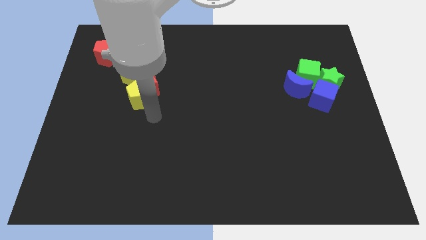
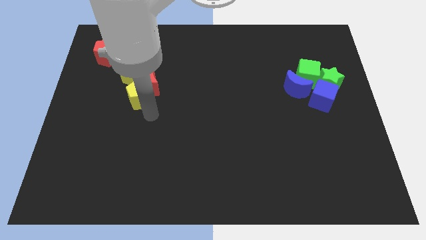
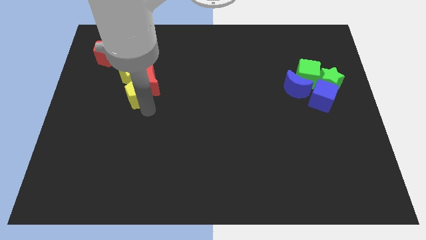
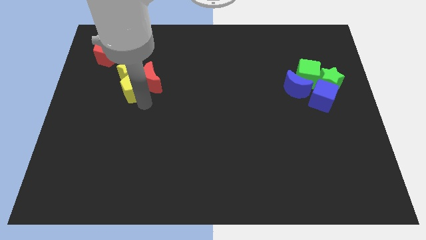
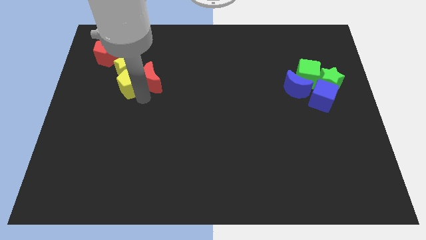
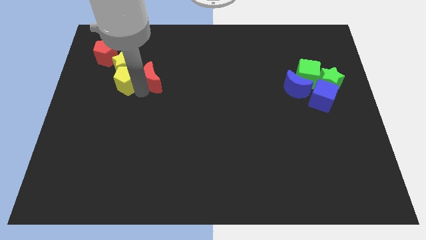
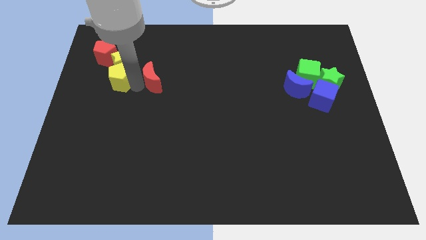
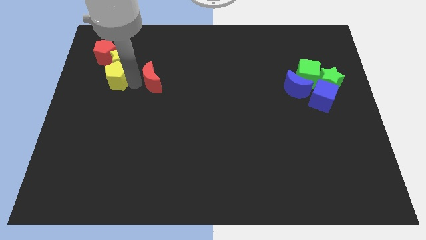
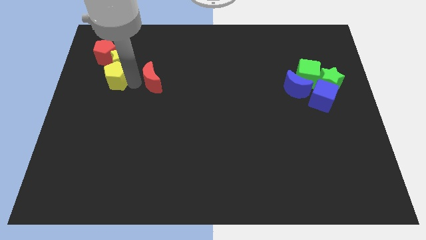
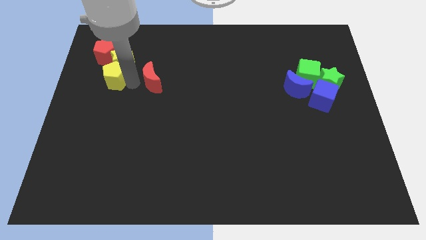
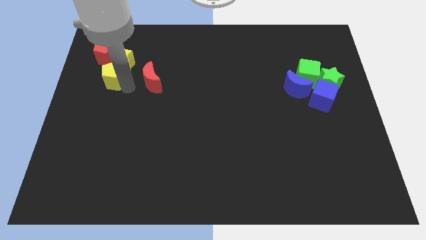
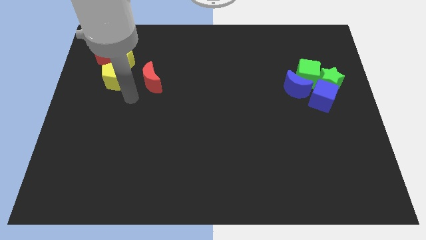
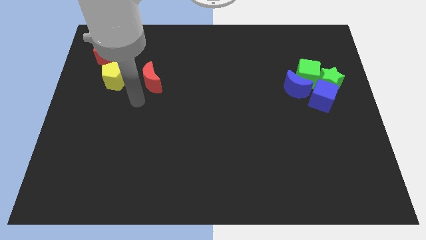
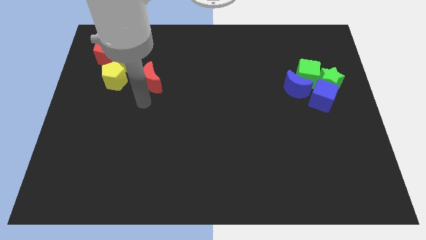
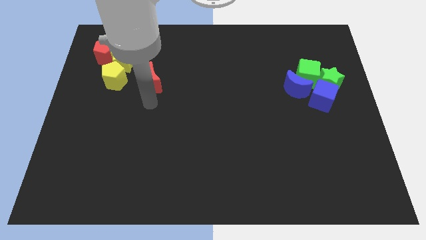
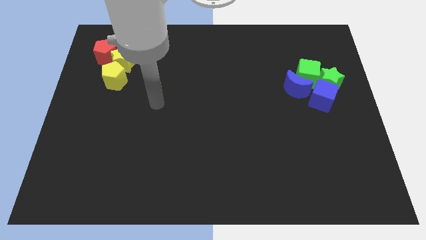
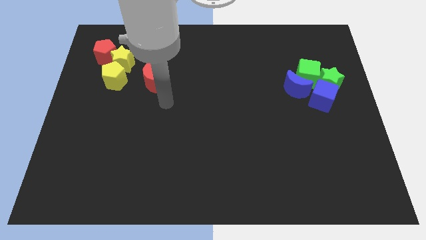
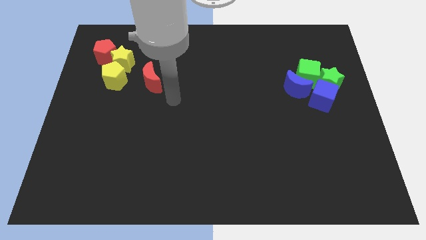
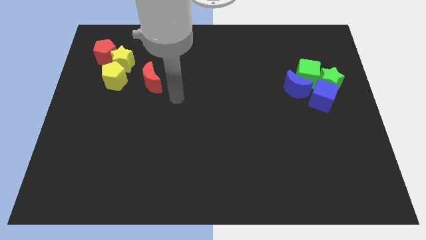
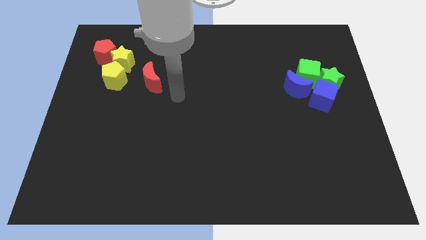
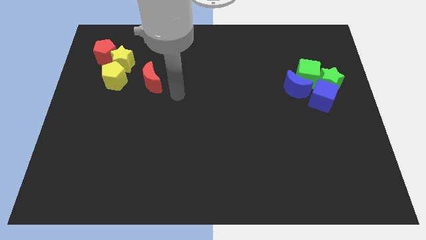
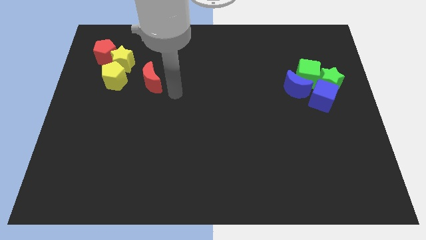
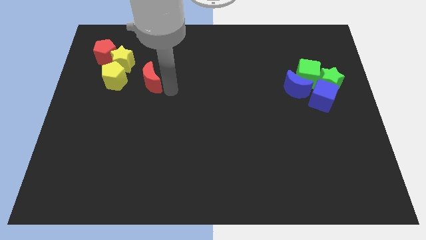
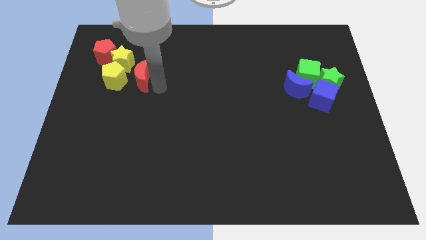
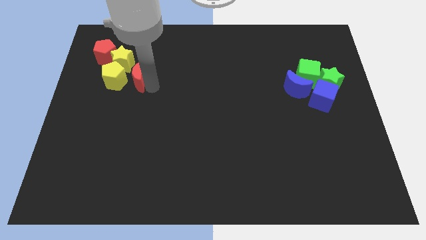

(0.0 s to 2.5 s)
place the yellow star and yellow pentagon in between the red pentagon and red crescent

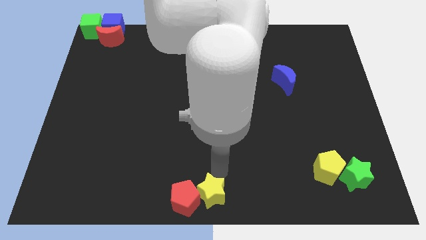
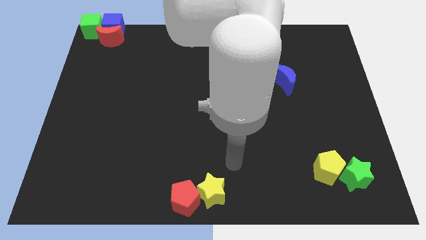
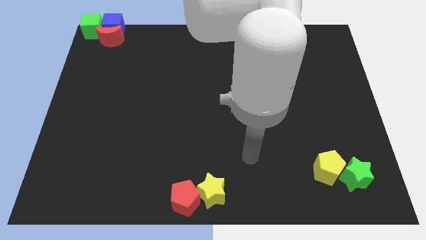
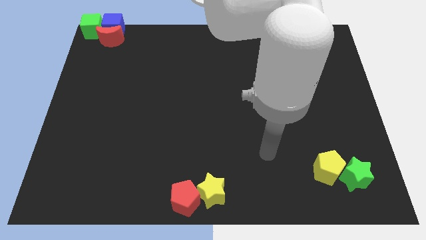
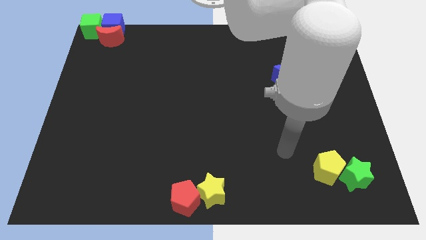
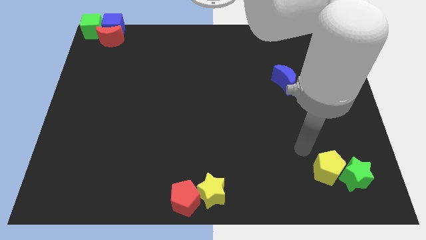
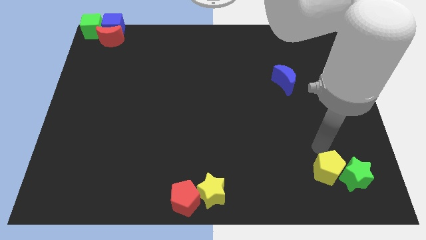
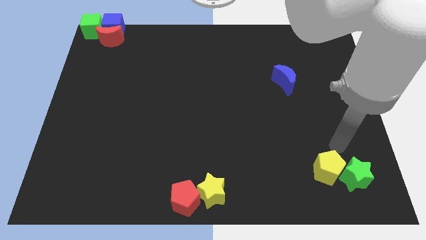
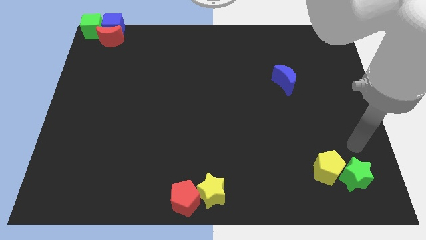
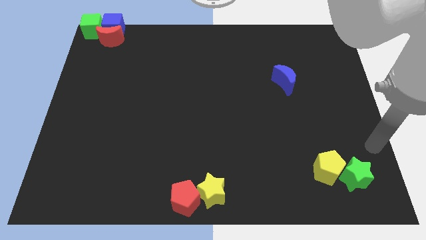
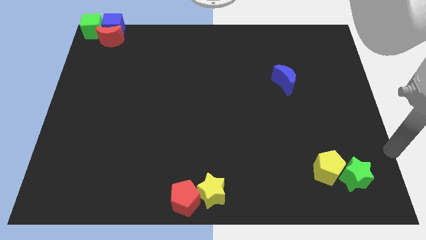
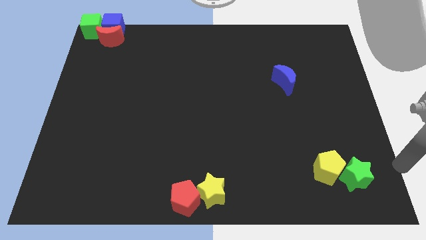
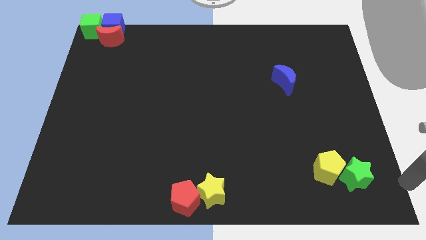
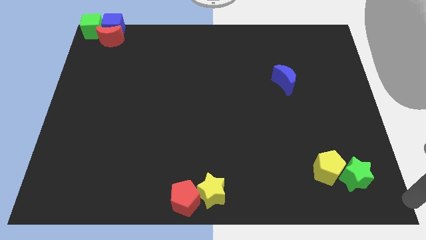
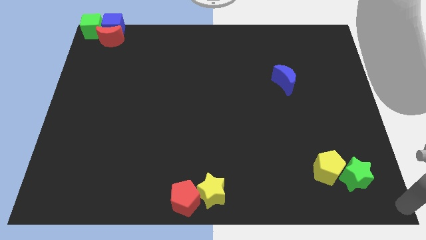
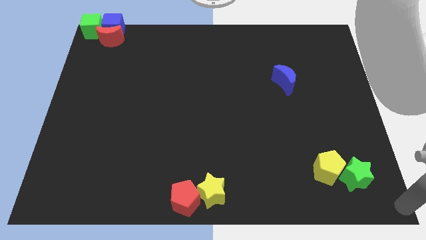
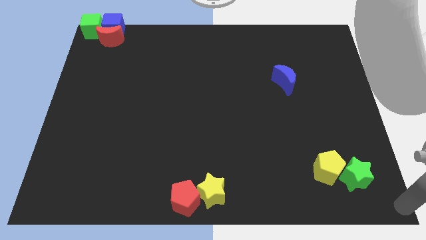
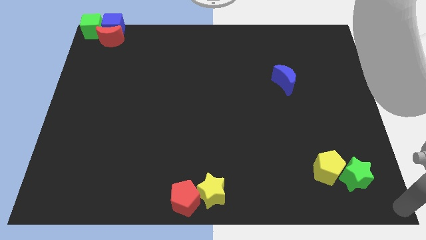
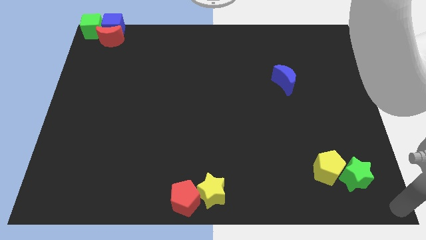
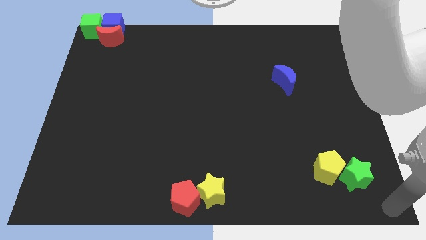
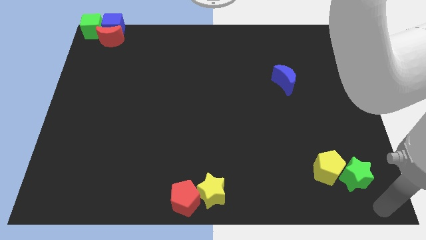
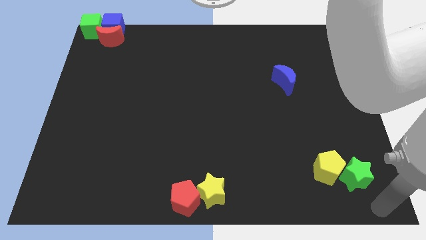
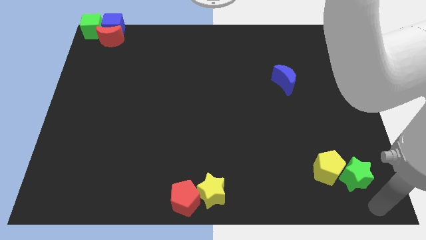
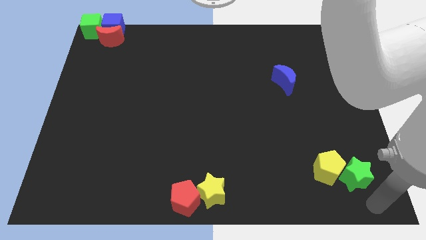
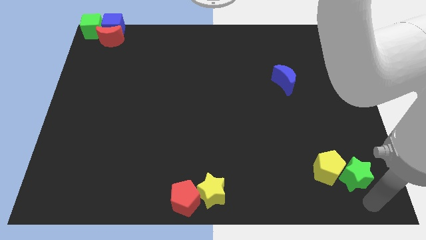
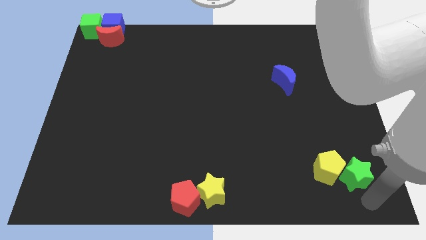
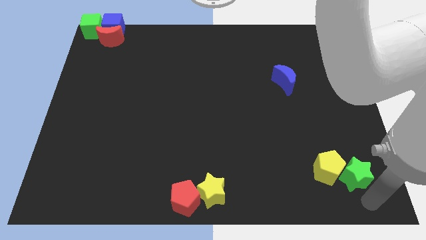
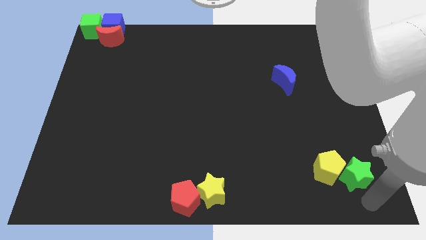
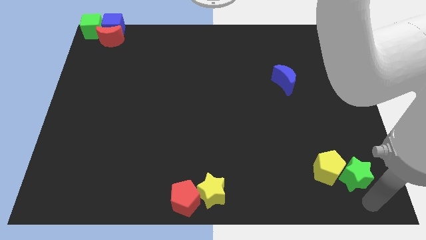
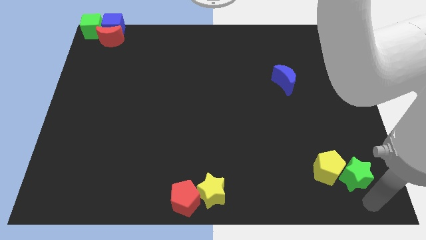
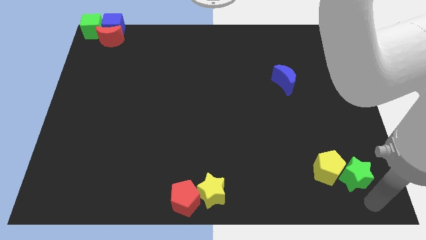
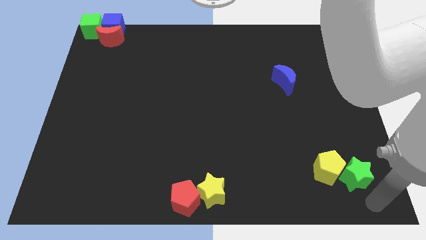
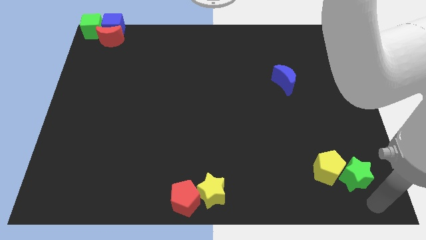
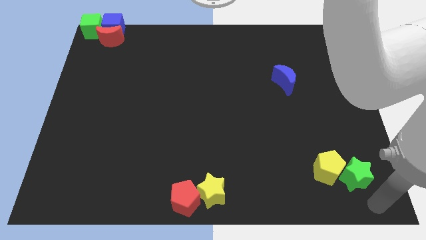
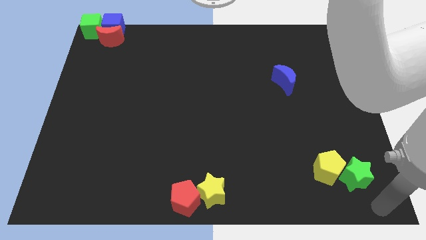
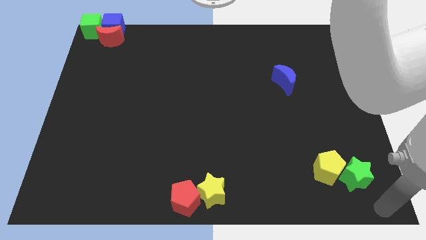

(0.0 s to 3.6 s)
push the arm to the bottom side of the green star

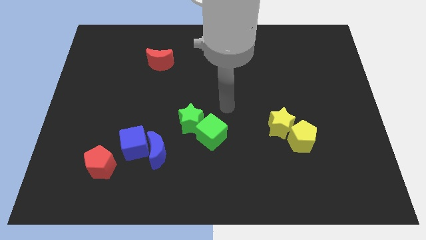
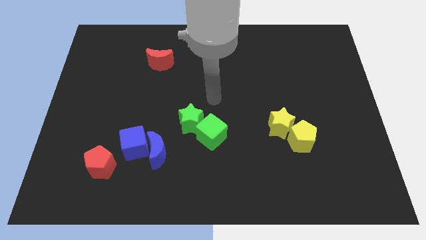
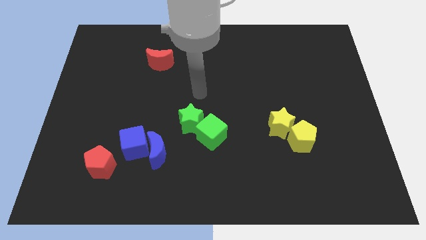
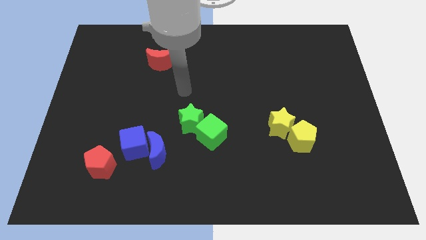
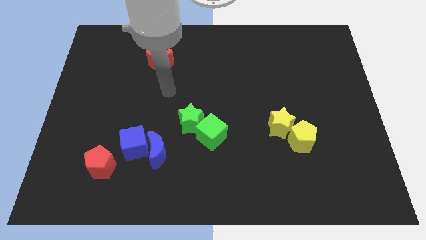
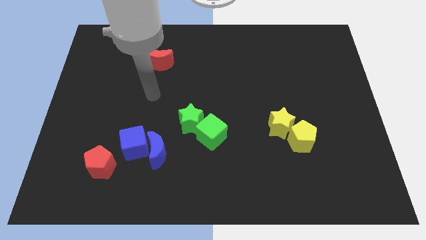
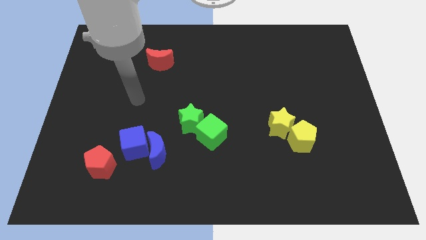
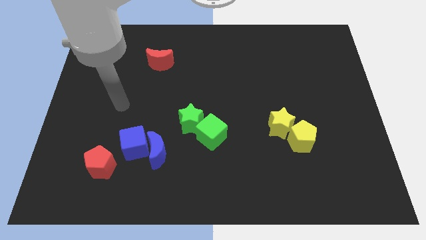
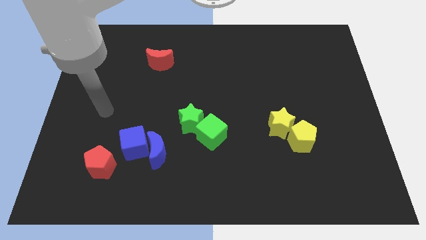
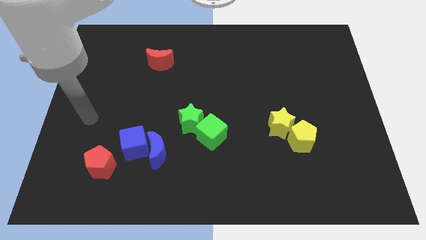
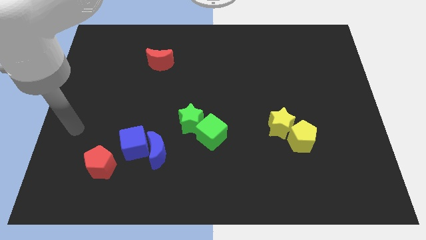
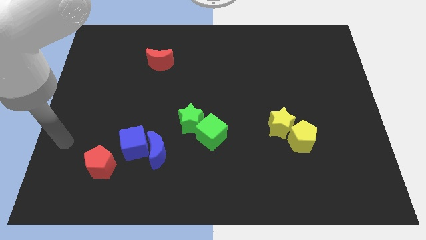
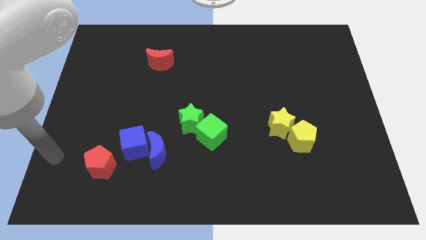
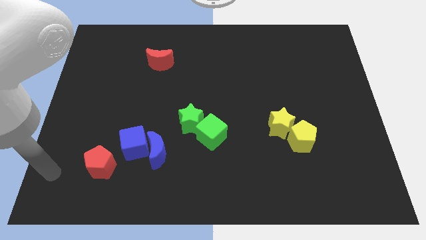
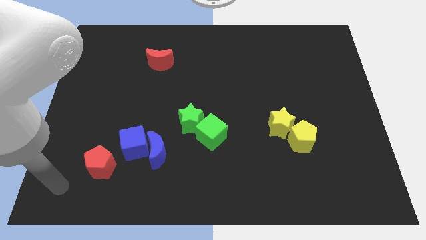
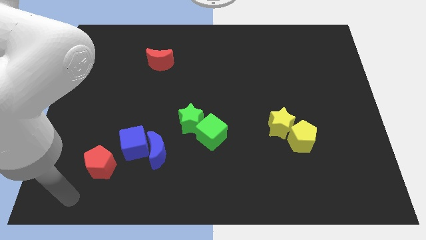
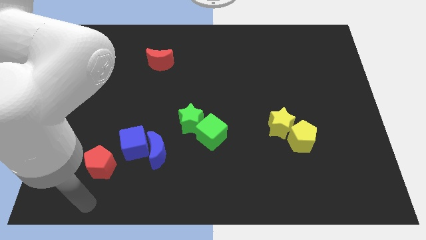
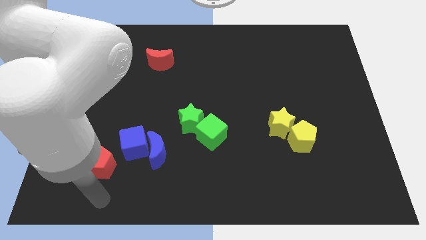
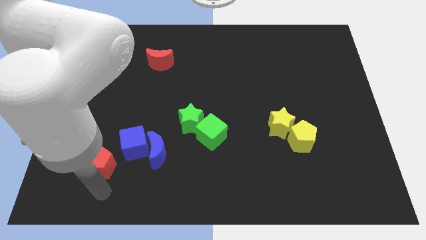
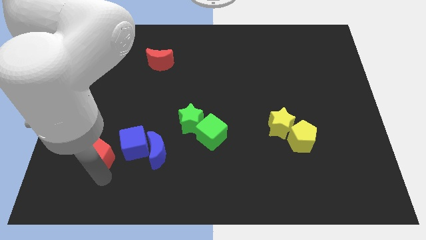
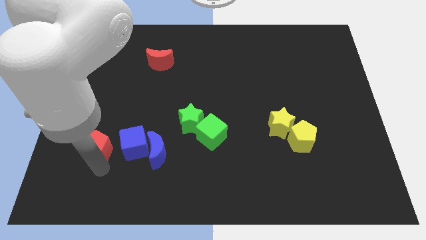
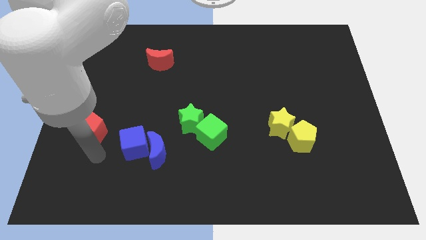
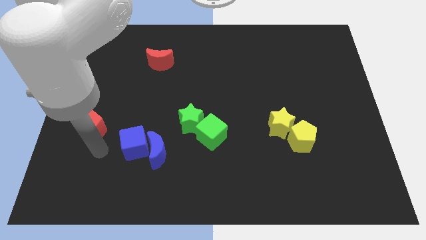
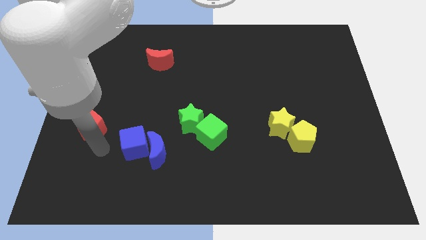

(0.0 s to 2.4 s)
push red pentagon slightly towards up

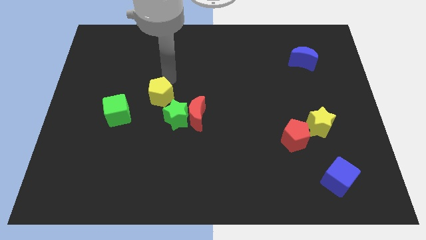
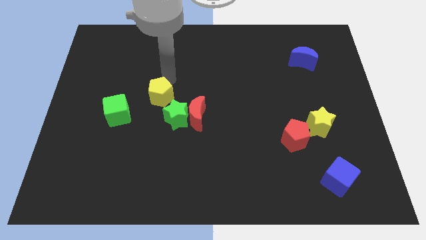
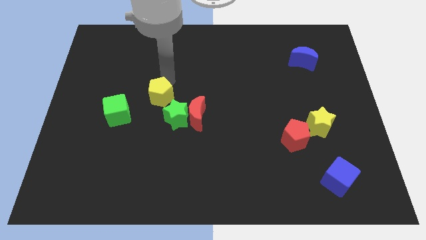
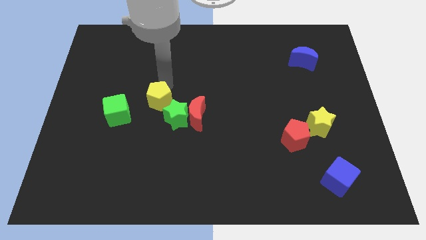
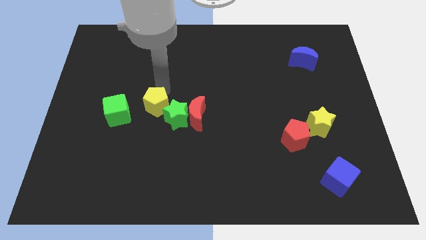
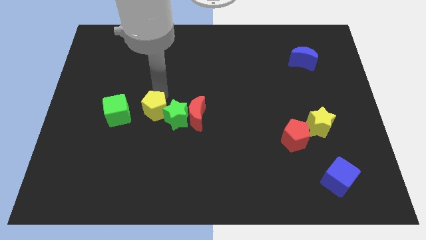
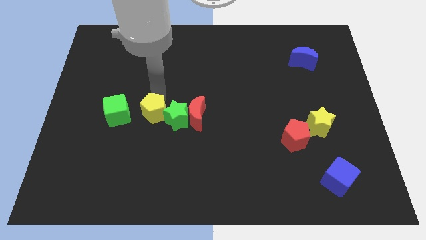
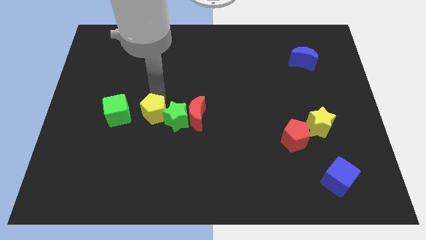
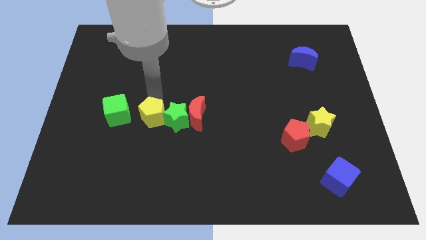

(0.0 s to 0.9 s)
push the yellow pentagon into left of the green star
